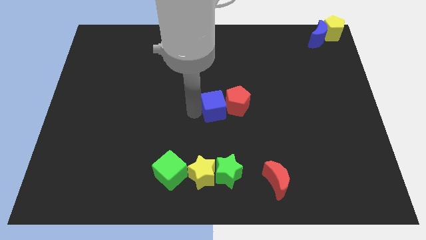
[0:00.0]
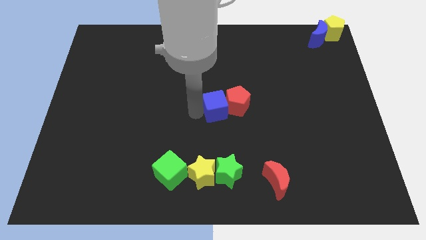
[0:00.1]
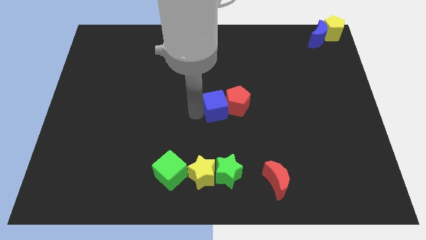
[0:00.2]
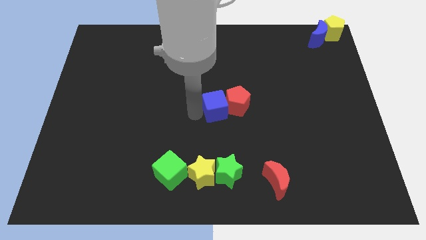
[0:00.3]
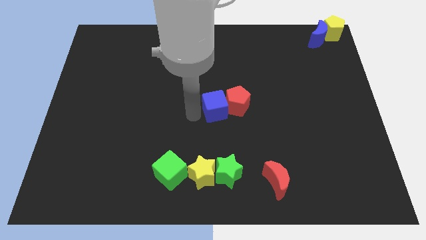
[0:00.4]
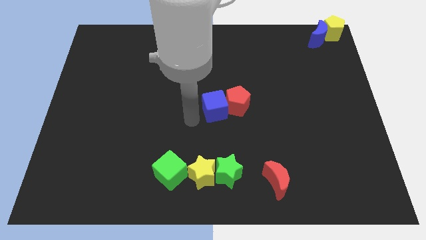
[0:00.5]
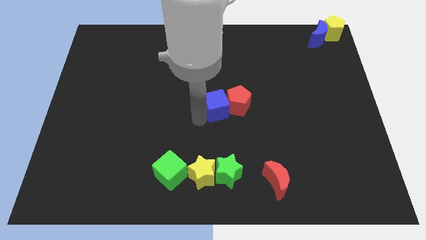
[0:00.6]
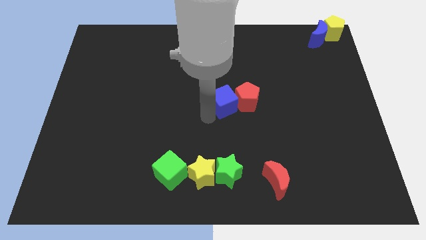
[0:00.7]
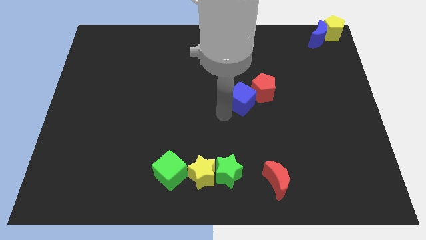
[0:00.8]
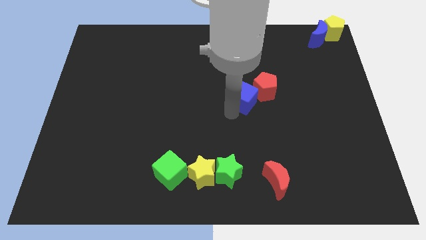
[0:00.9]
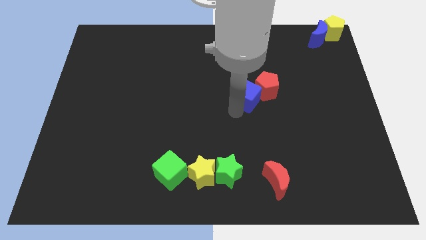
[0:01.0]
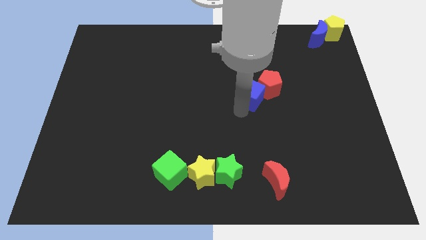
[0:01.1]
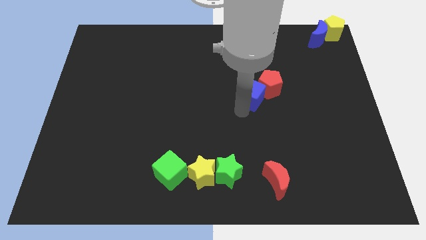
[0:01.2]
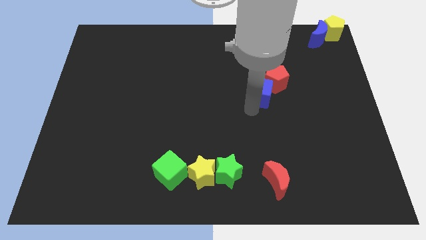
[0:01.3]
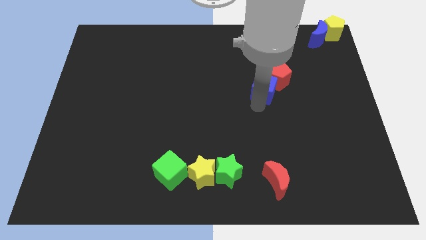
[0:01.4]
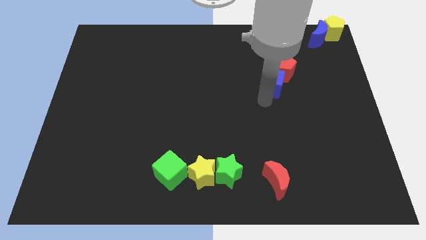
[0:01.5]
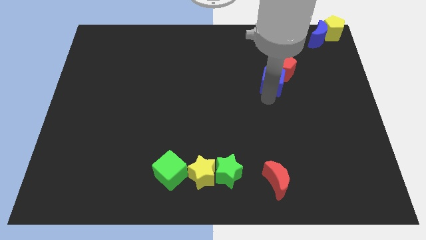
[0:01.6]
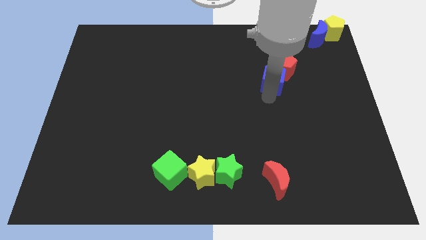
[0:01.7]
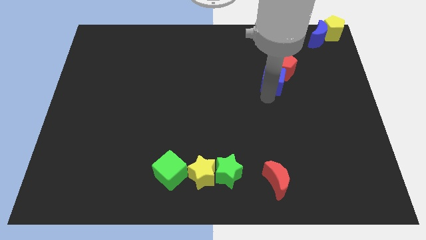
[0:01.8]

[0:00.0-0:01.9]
push the blue cube and the red pentagon towards top of the board

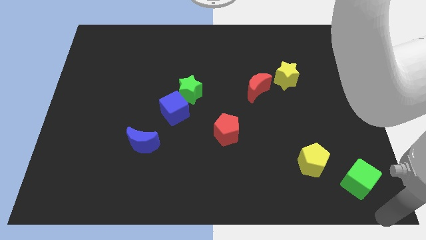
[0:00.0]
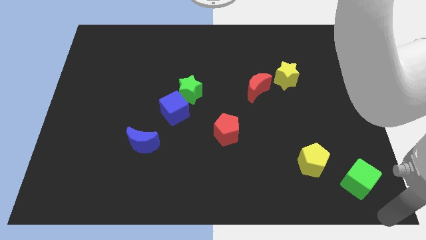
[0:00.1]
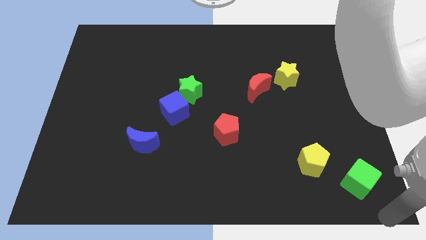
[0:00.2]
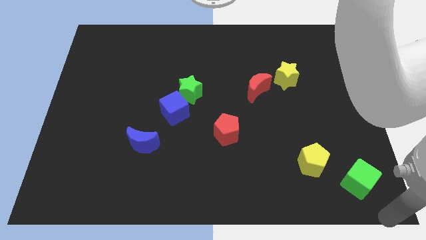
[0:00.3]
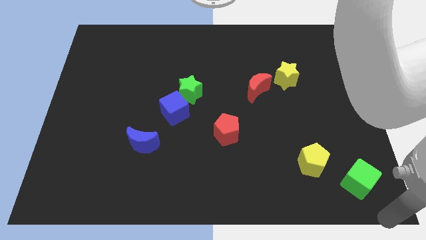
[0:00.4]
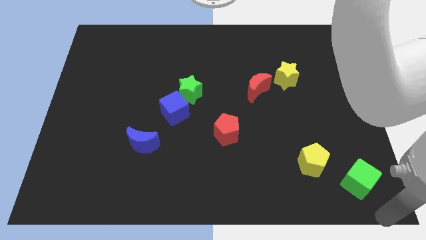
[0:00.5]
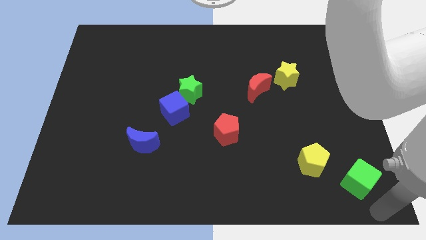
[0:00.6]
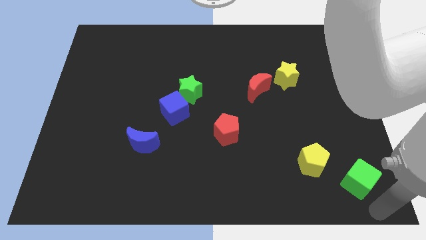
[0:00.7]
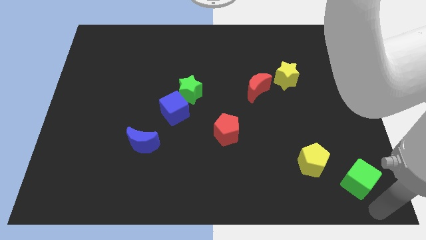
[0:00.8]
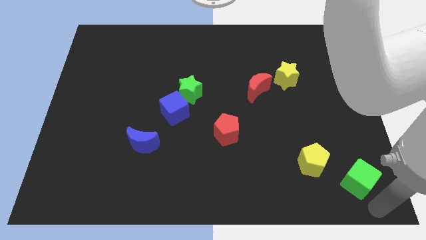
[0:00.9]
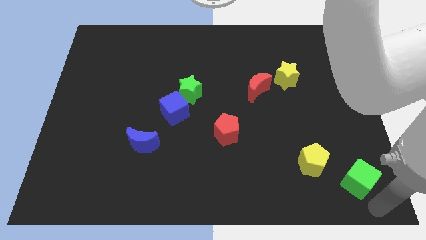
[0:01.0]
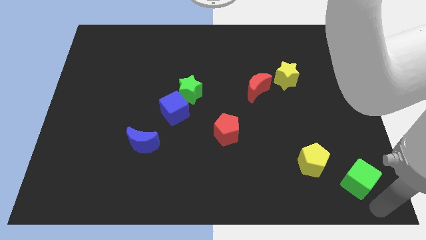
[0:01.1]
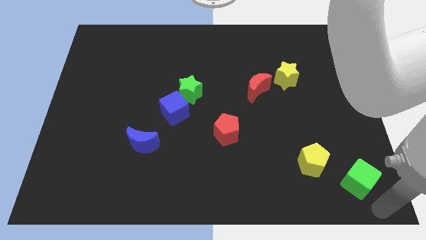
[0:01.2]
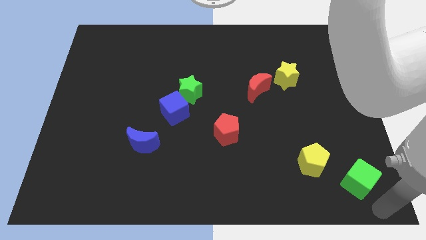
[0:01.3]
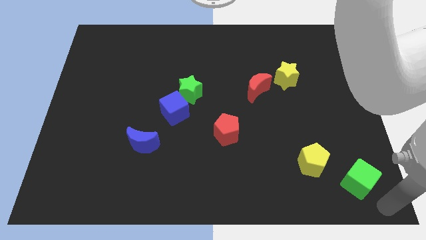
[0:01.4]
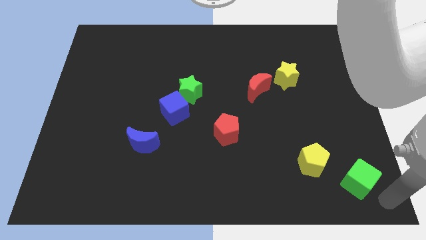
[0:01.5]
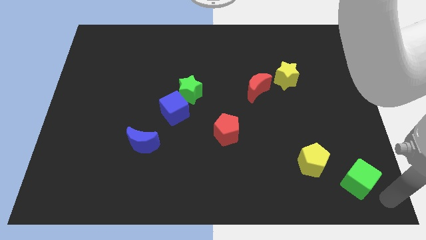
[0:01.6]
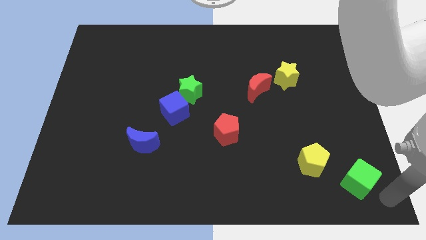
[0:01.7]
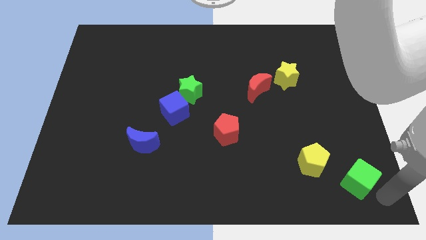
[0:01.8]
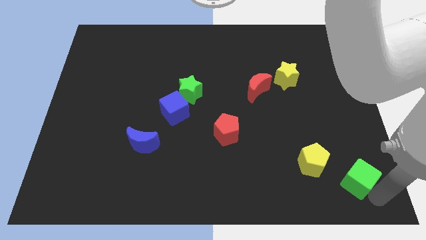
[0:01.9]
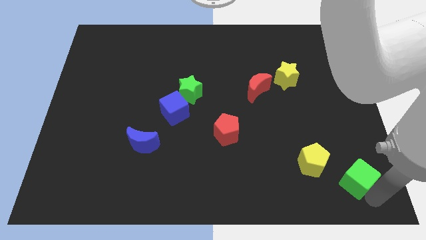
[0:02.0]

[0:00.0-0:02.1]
move the arm towards the green cube

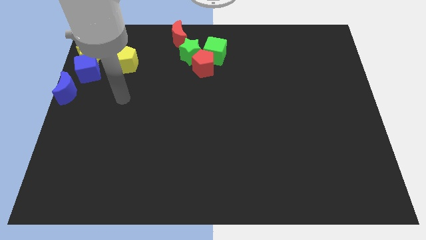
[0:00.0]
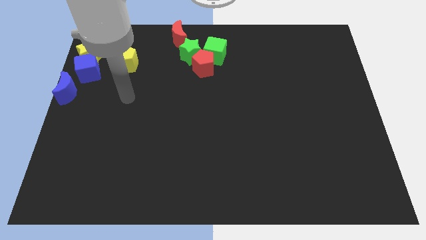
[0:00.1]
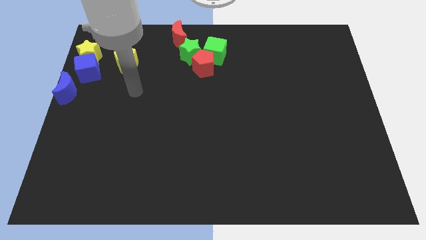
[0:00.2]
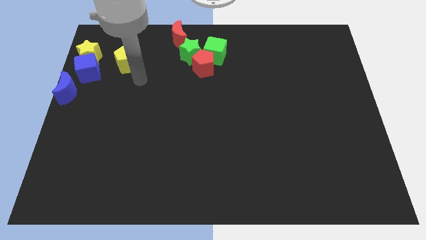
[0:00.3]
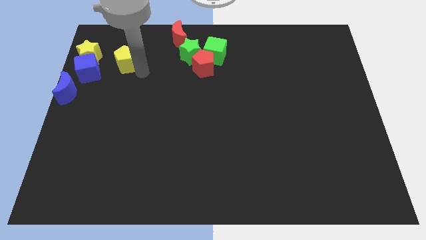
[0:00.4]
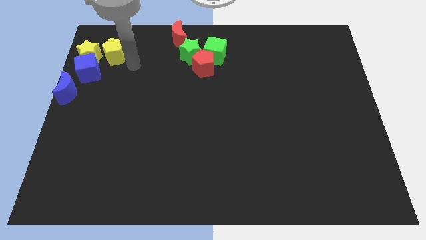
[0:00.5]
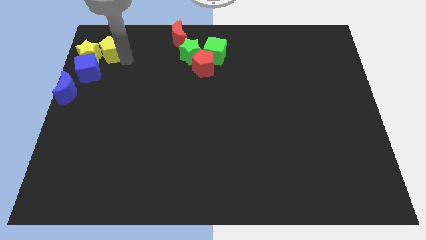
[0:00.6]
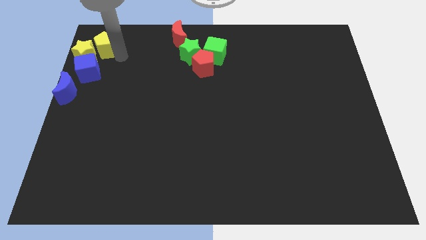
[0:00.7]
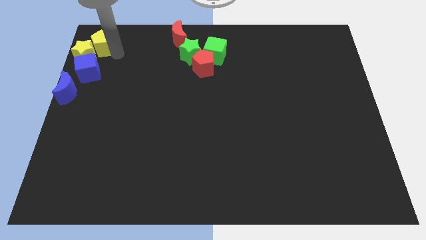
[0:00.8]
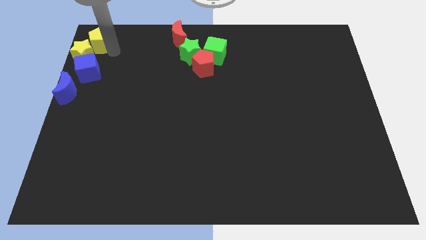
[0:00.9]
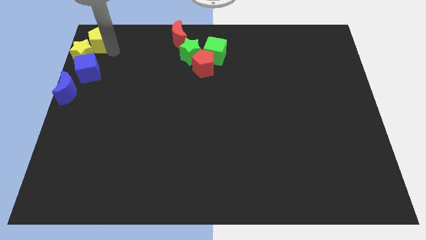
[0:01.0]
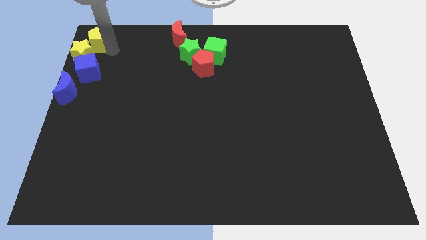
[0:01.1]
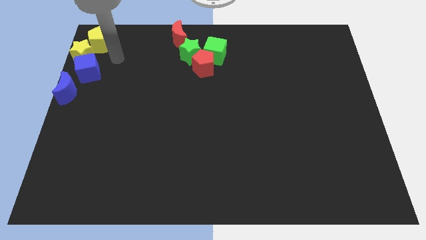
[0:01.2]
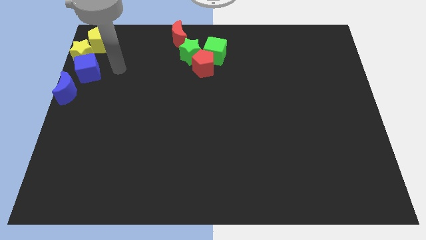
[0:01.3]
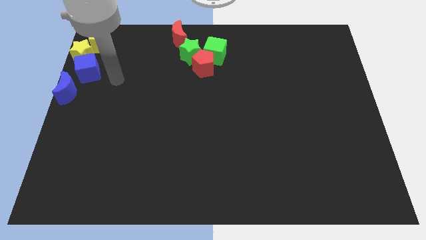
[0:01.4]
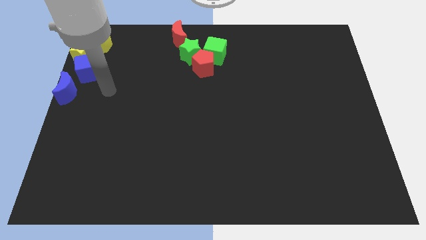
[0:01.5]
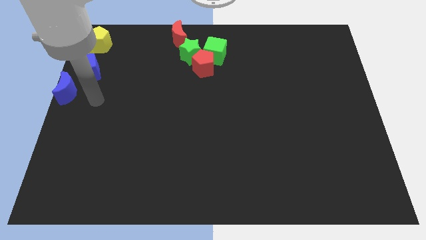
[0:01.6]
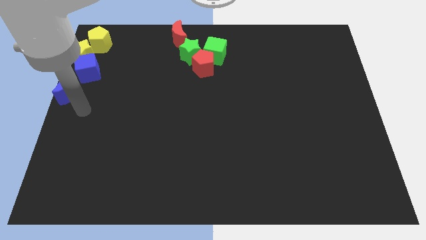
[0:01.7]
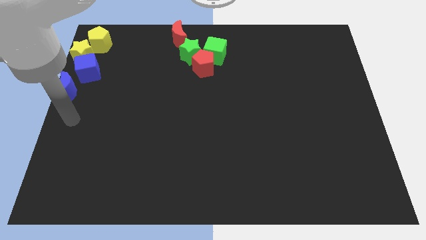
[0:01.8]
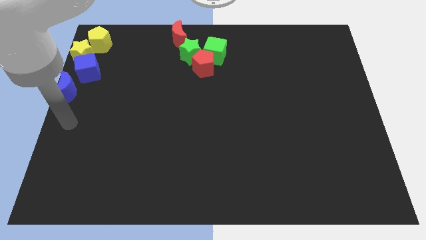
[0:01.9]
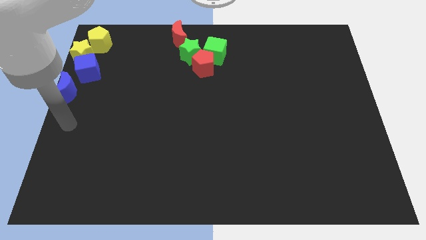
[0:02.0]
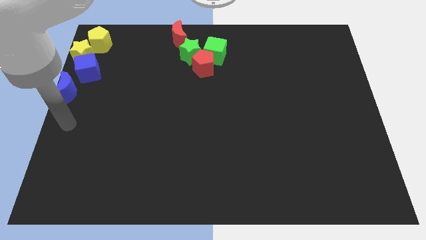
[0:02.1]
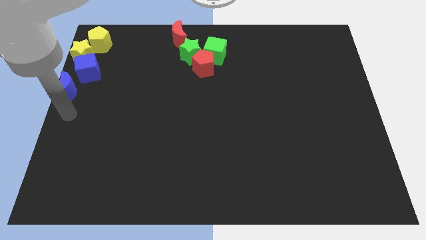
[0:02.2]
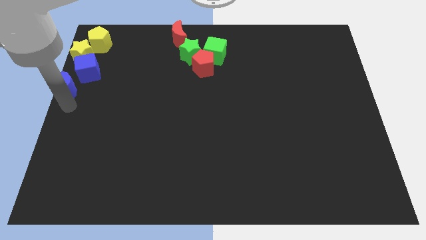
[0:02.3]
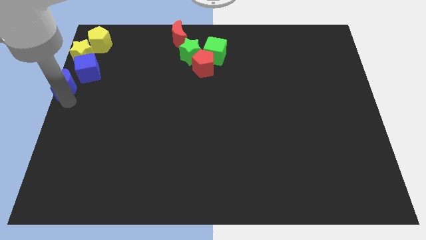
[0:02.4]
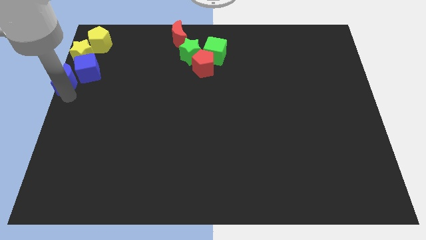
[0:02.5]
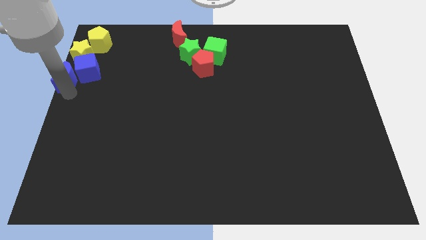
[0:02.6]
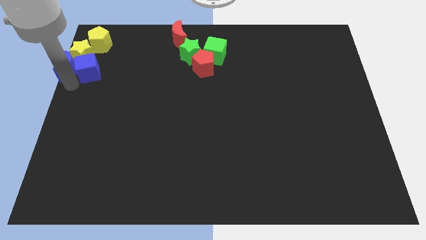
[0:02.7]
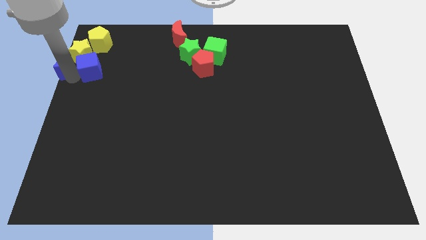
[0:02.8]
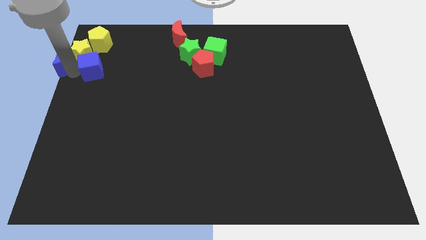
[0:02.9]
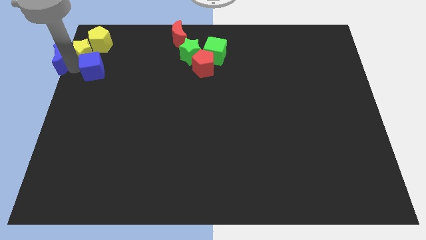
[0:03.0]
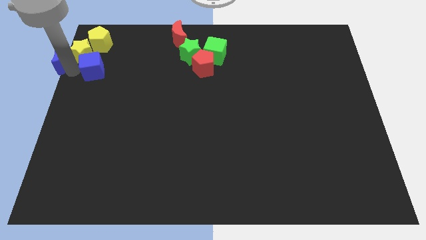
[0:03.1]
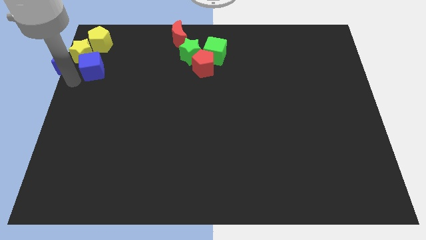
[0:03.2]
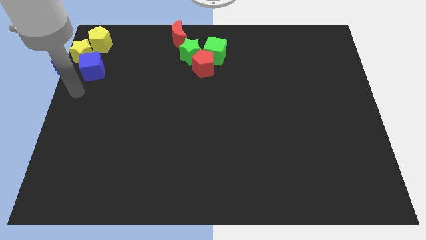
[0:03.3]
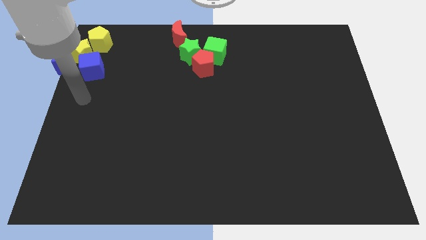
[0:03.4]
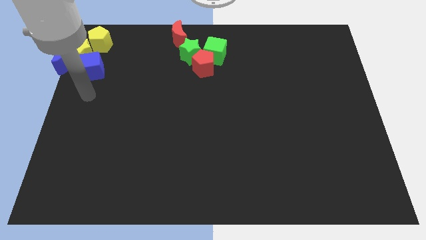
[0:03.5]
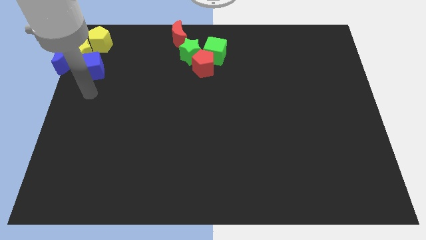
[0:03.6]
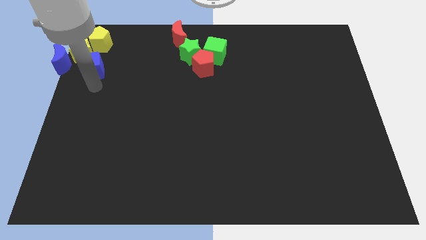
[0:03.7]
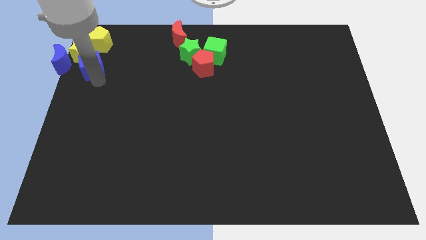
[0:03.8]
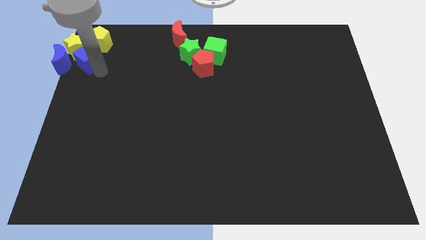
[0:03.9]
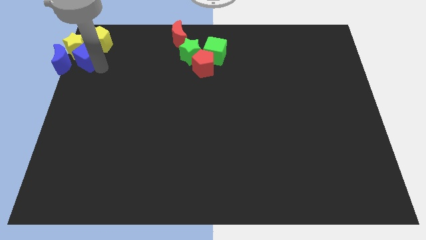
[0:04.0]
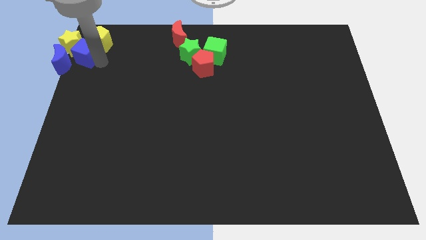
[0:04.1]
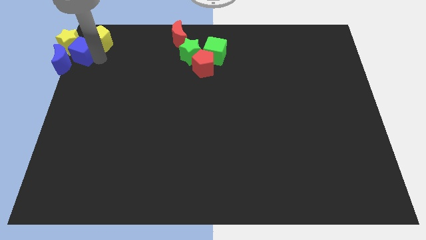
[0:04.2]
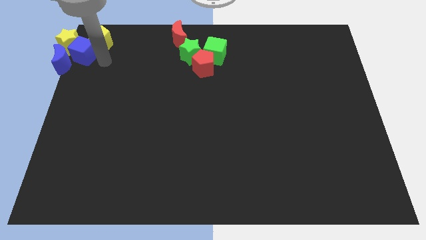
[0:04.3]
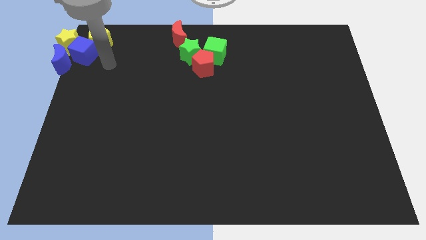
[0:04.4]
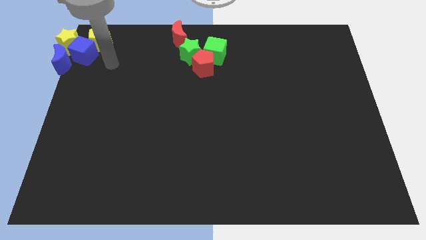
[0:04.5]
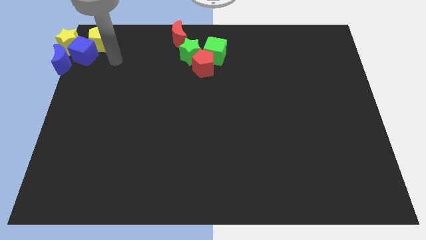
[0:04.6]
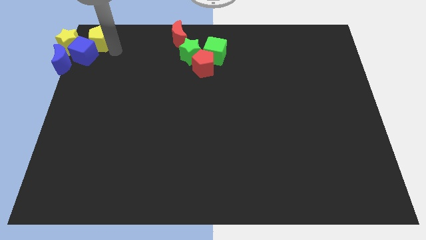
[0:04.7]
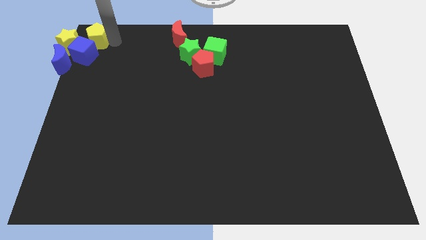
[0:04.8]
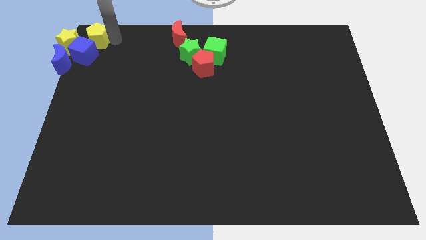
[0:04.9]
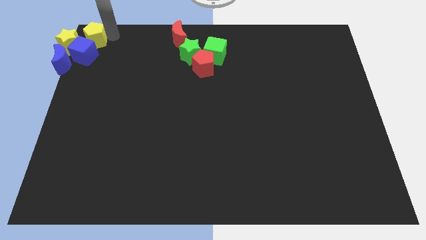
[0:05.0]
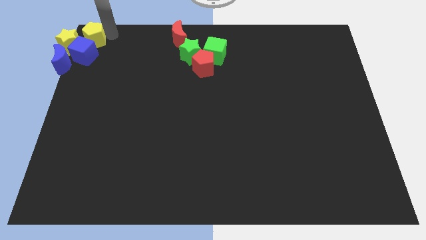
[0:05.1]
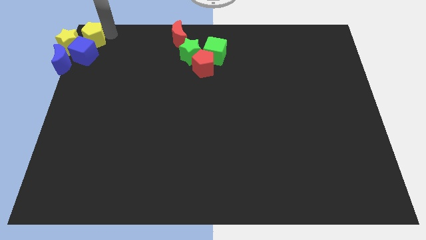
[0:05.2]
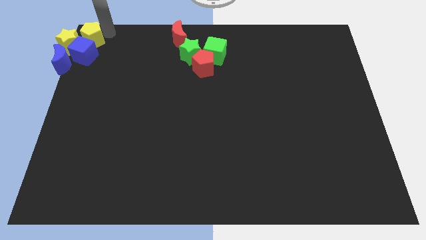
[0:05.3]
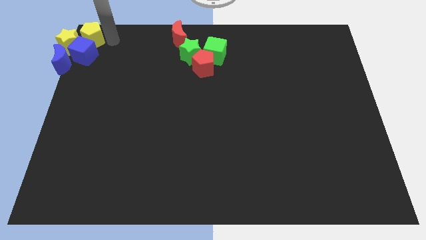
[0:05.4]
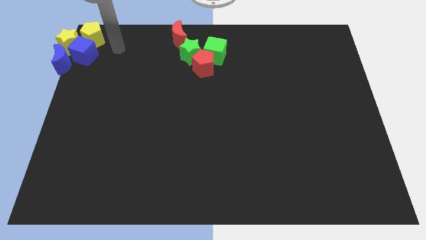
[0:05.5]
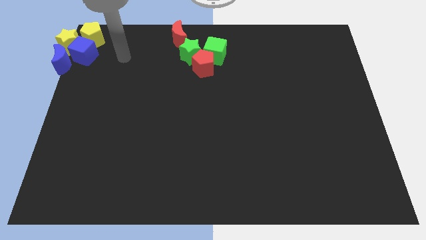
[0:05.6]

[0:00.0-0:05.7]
place the yellow and blue blocks at the top left corner of the board
